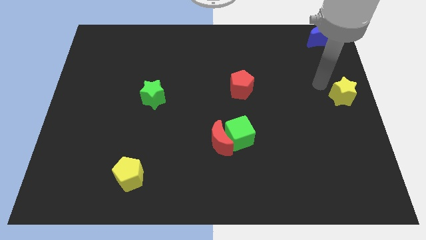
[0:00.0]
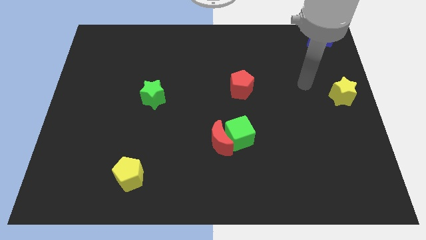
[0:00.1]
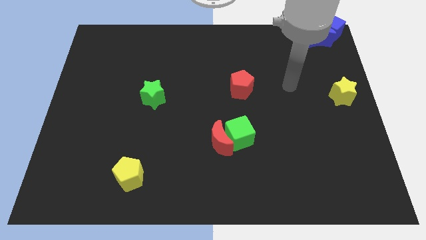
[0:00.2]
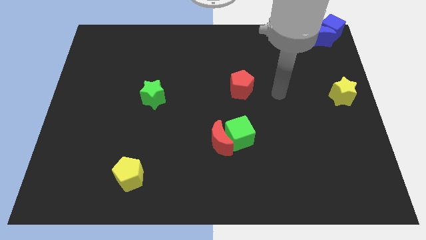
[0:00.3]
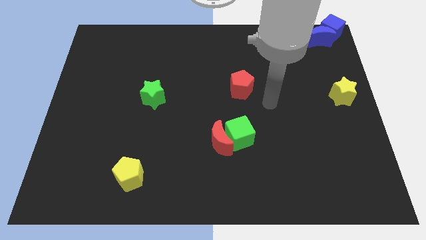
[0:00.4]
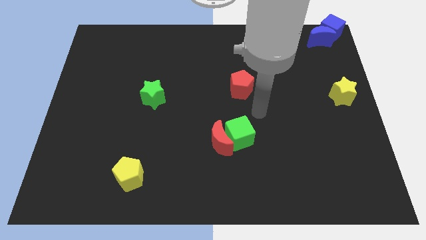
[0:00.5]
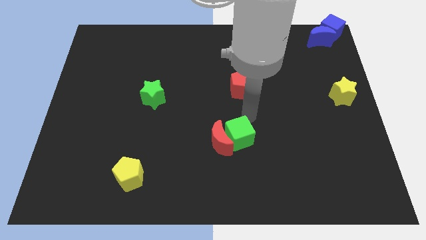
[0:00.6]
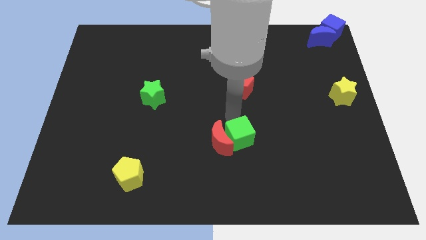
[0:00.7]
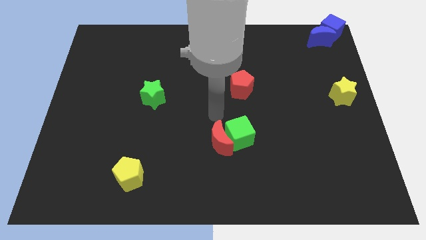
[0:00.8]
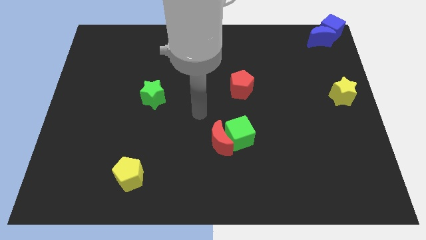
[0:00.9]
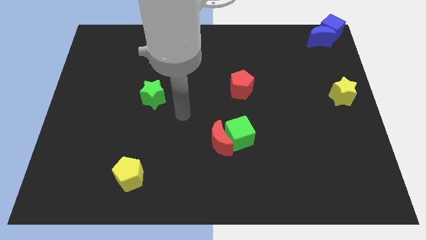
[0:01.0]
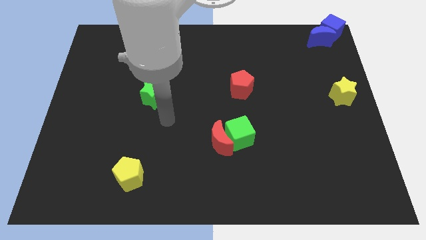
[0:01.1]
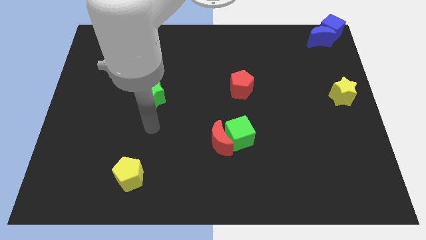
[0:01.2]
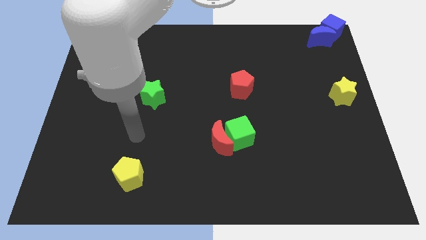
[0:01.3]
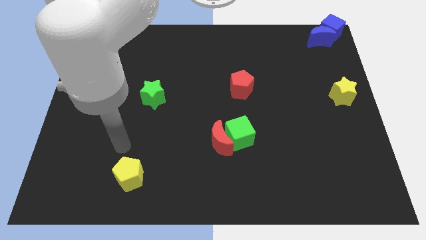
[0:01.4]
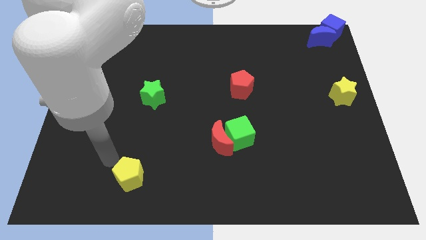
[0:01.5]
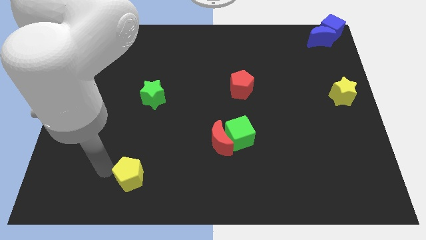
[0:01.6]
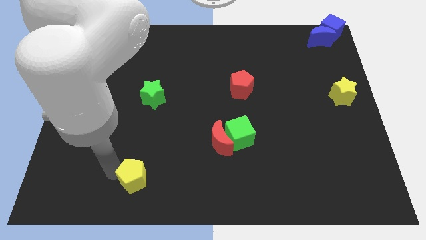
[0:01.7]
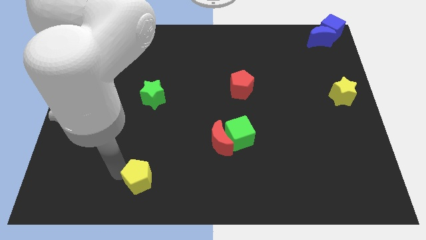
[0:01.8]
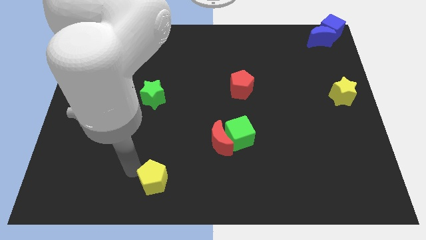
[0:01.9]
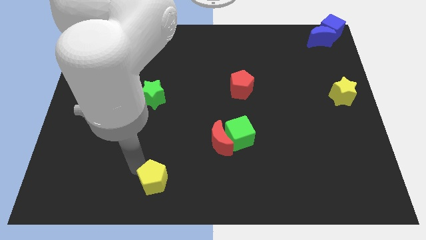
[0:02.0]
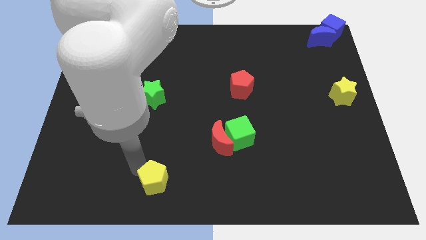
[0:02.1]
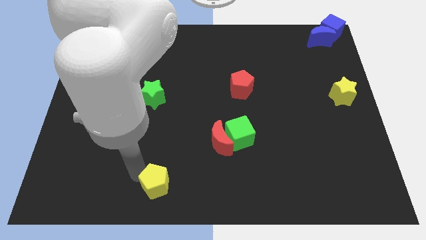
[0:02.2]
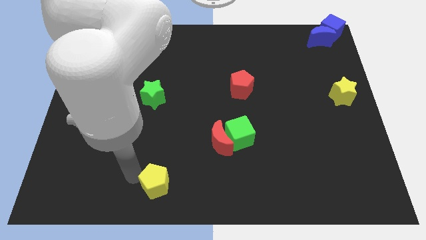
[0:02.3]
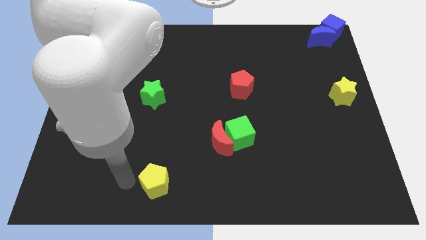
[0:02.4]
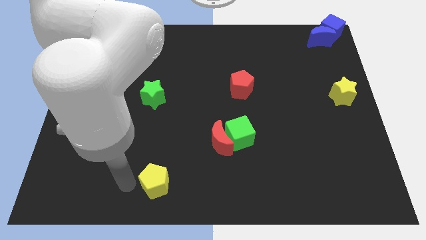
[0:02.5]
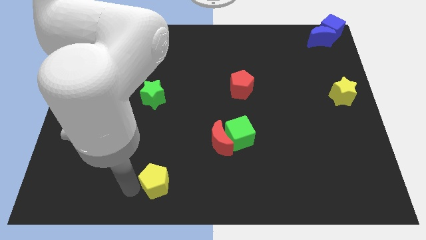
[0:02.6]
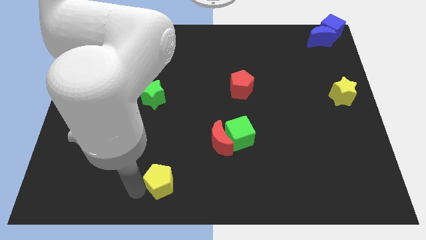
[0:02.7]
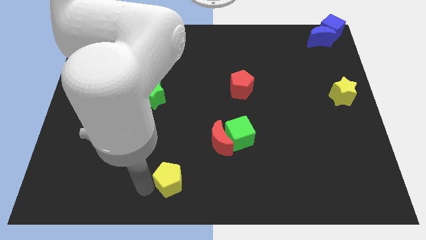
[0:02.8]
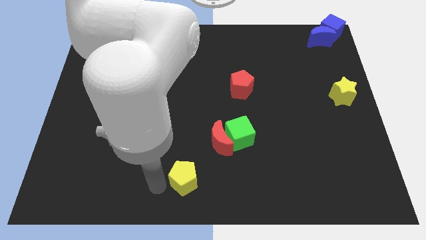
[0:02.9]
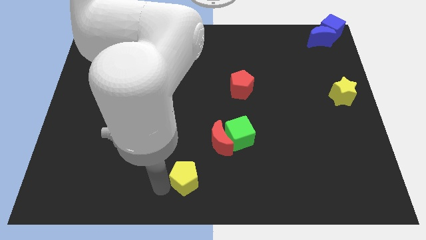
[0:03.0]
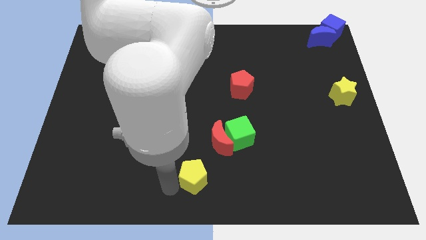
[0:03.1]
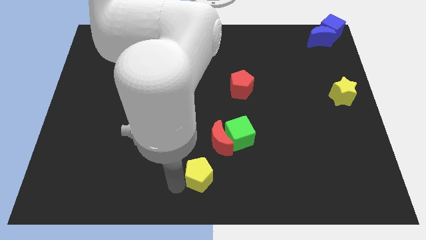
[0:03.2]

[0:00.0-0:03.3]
place the yellow pentagon at bottom center of the board

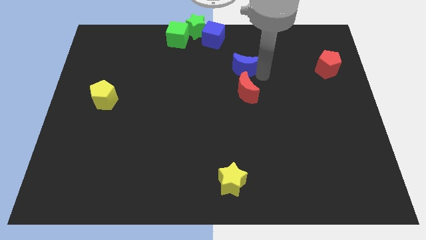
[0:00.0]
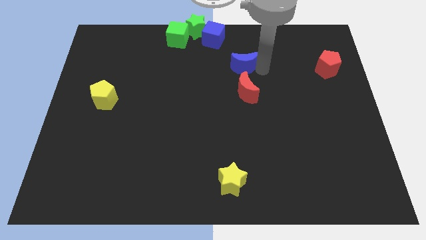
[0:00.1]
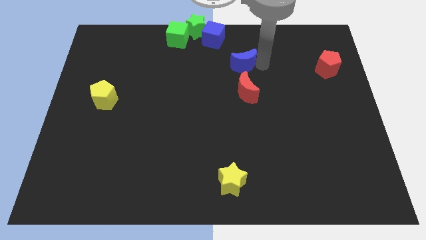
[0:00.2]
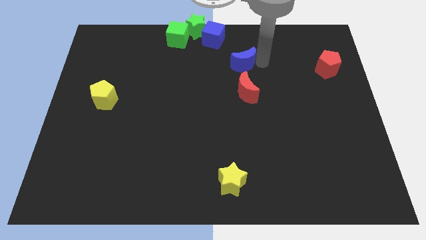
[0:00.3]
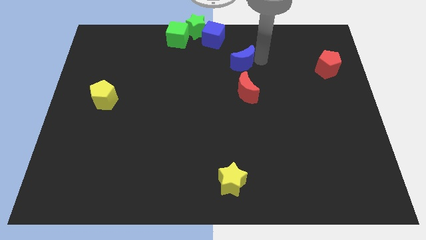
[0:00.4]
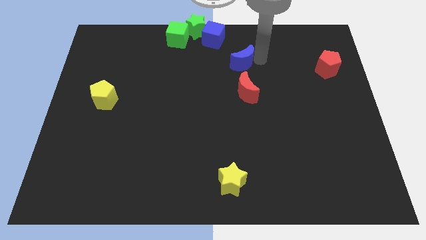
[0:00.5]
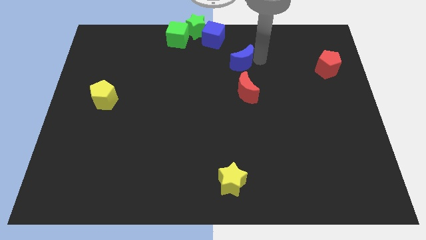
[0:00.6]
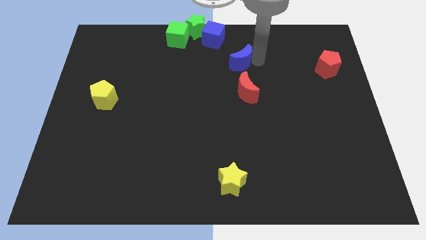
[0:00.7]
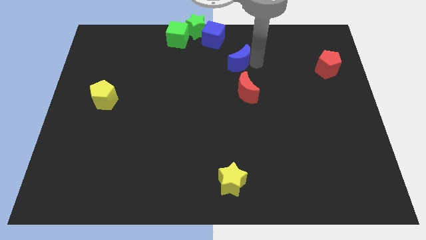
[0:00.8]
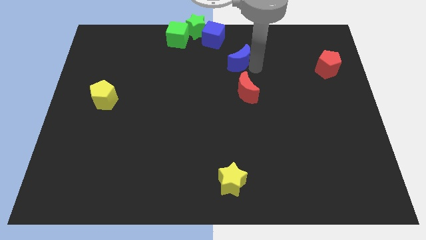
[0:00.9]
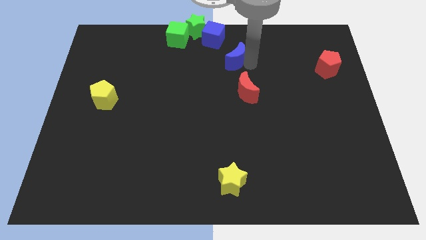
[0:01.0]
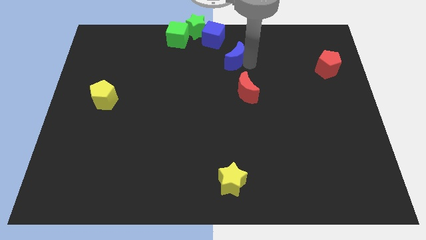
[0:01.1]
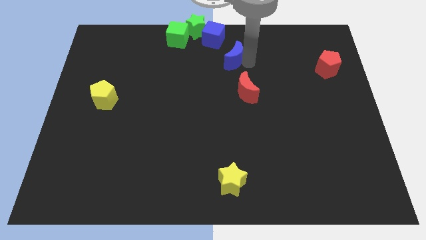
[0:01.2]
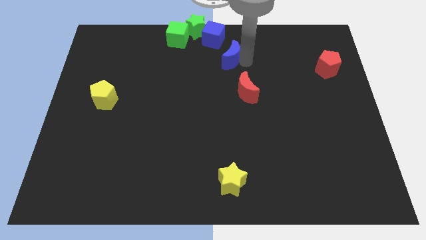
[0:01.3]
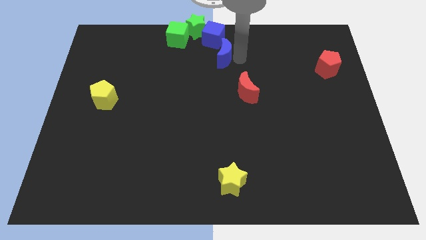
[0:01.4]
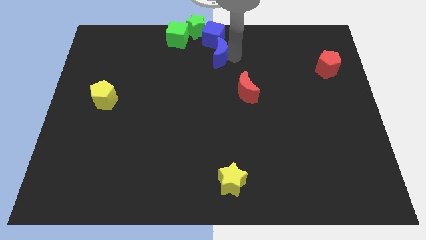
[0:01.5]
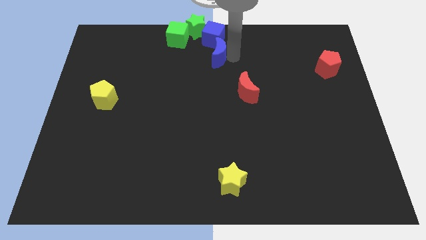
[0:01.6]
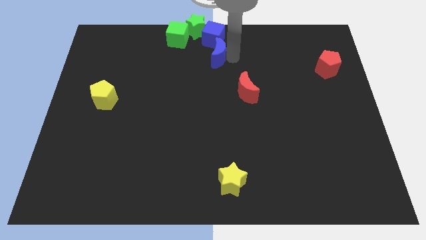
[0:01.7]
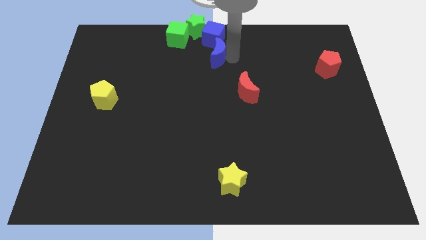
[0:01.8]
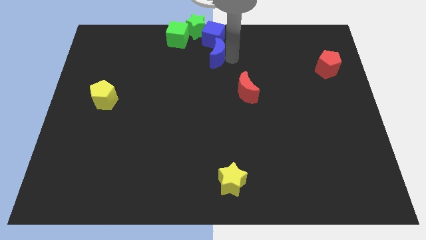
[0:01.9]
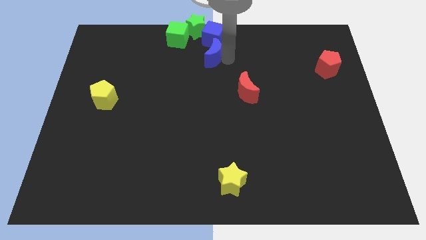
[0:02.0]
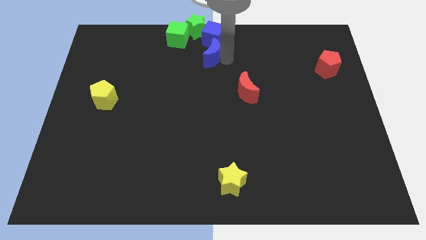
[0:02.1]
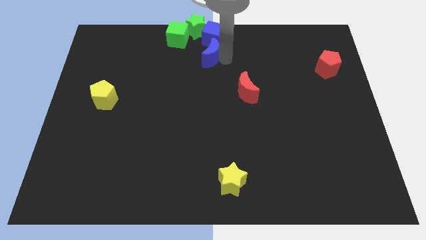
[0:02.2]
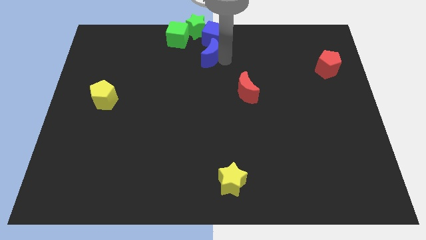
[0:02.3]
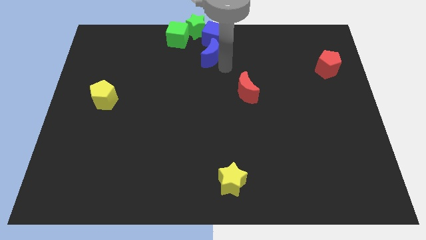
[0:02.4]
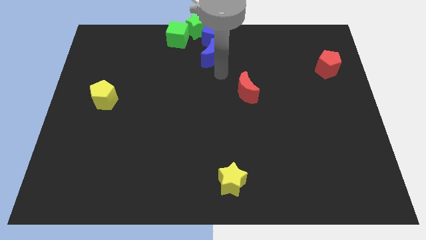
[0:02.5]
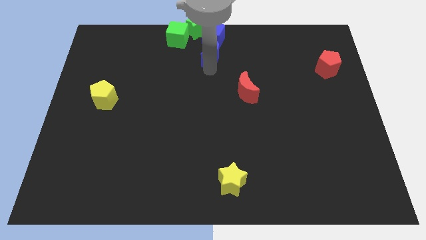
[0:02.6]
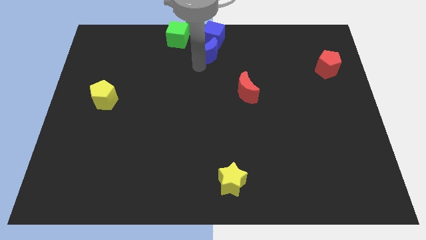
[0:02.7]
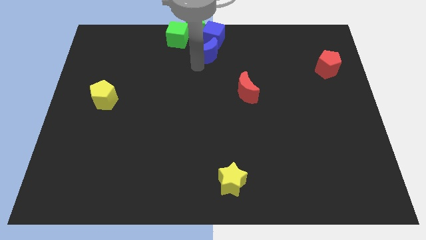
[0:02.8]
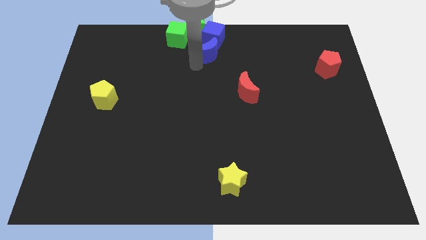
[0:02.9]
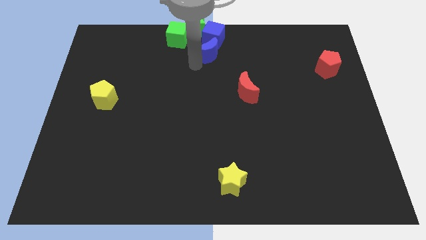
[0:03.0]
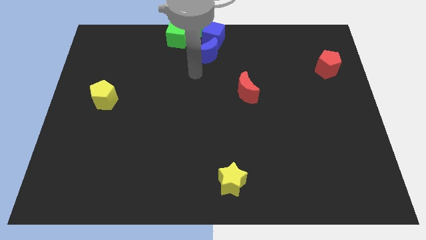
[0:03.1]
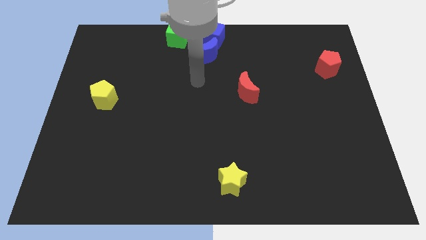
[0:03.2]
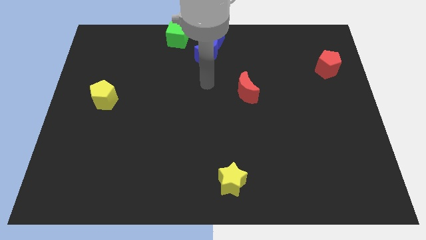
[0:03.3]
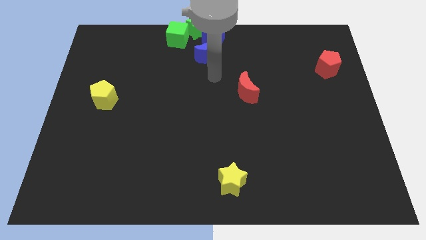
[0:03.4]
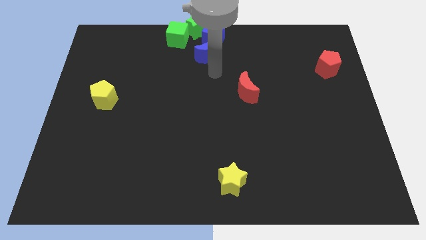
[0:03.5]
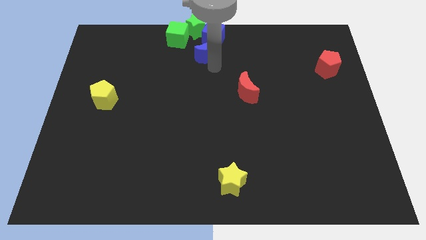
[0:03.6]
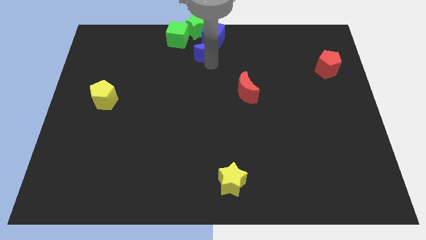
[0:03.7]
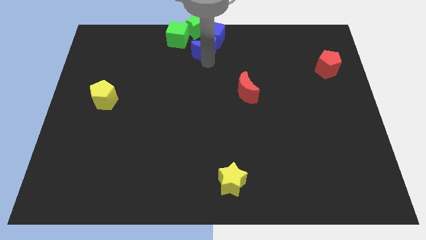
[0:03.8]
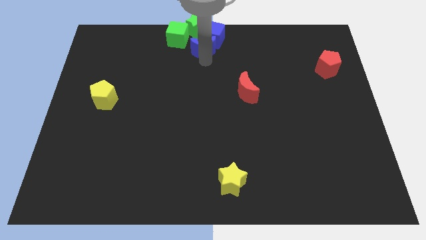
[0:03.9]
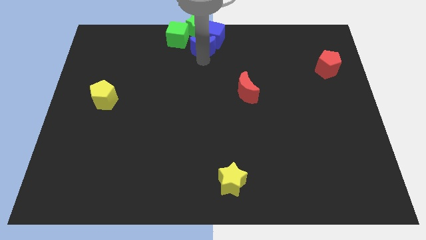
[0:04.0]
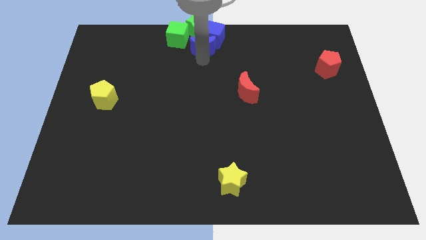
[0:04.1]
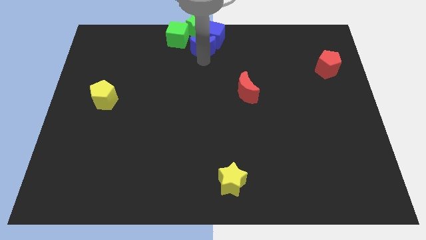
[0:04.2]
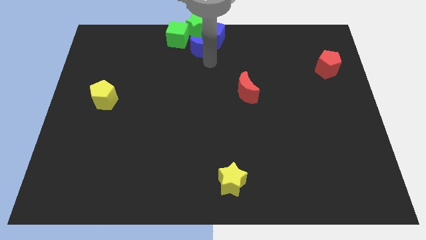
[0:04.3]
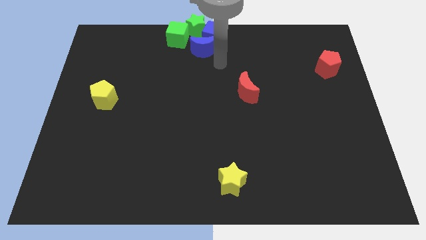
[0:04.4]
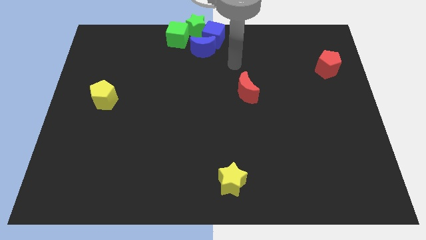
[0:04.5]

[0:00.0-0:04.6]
add the blue moon to the group of blocks at the top center of the board

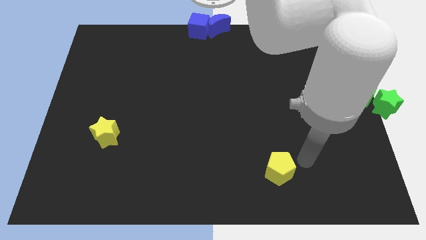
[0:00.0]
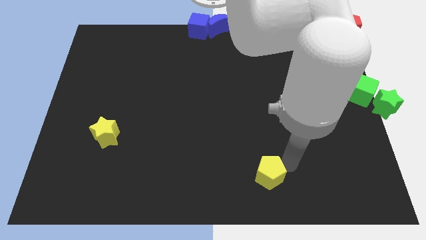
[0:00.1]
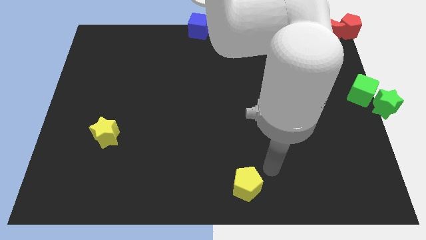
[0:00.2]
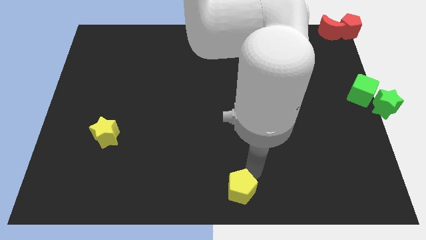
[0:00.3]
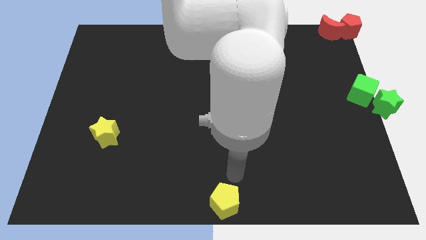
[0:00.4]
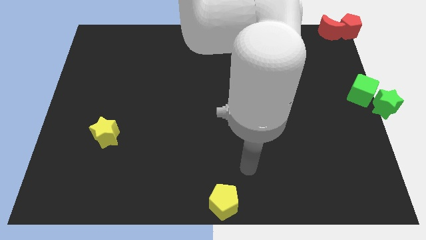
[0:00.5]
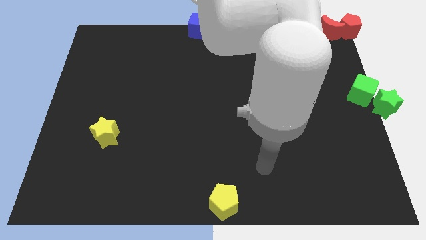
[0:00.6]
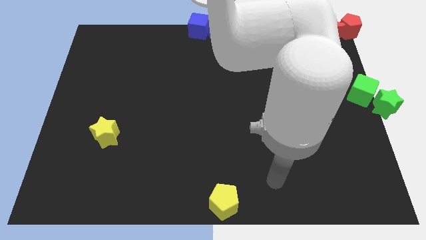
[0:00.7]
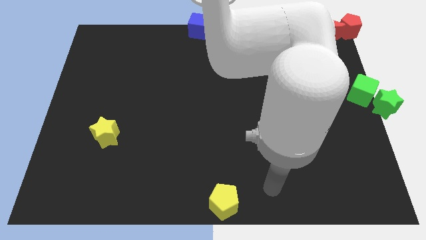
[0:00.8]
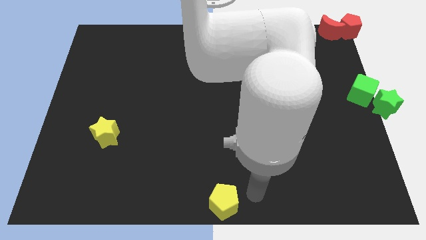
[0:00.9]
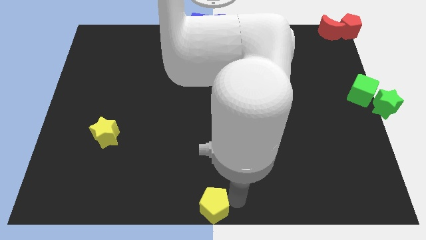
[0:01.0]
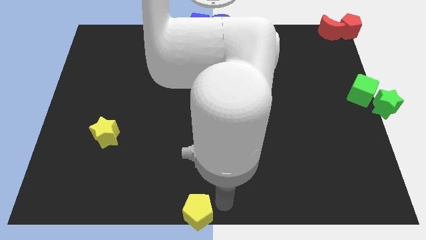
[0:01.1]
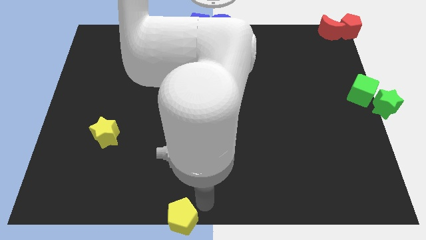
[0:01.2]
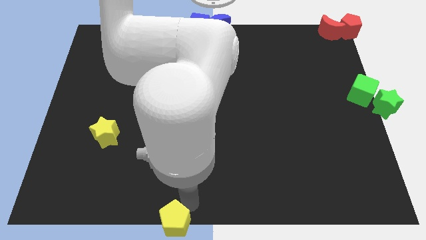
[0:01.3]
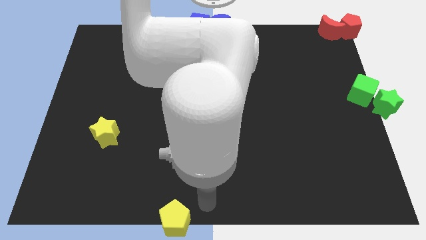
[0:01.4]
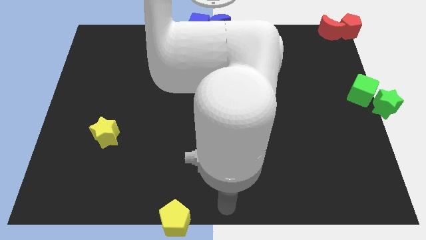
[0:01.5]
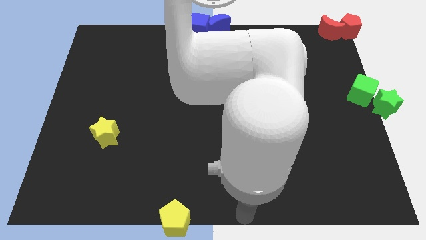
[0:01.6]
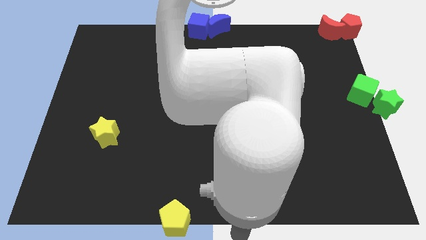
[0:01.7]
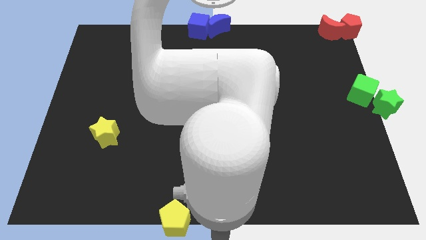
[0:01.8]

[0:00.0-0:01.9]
place the yellow pentagon at the bottom center of the board
